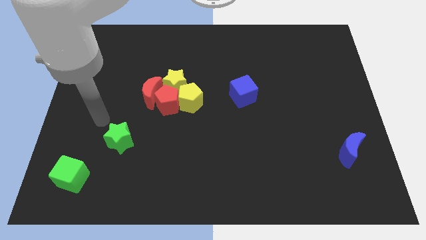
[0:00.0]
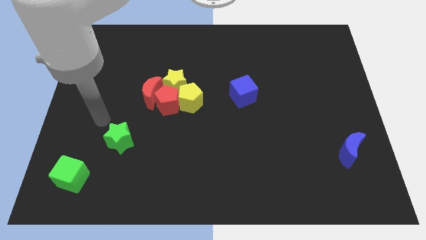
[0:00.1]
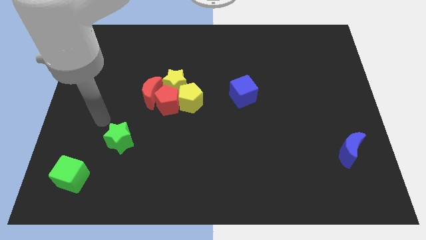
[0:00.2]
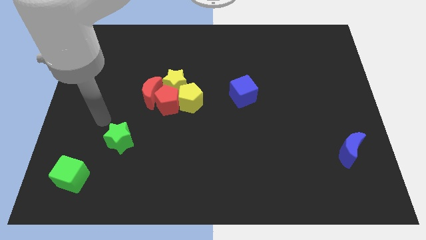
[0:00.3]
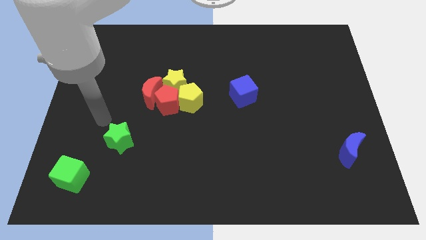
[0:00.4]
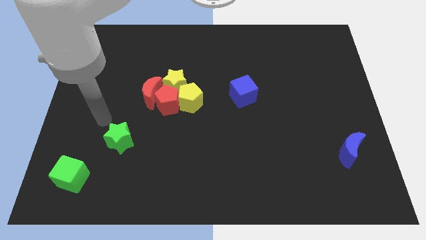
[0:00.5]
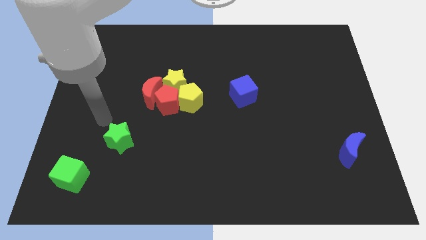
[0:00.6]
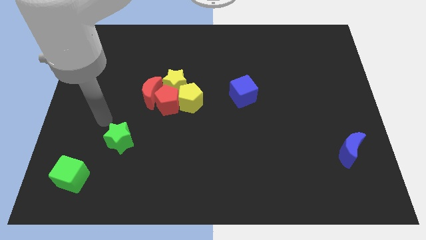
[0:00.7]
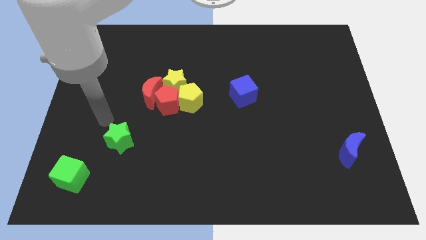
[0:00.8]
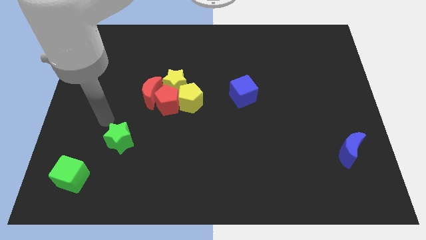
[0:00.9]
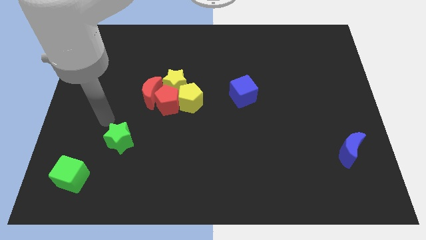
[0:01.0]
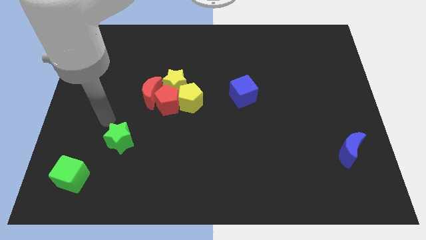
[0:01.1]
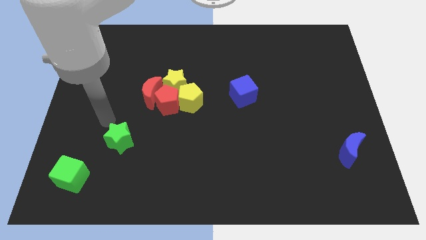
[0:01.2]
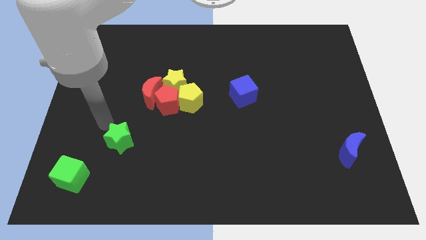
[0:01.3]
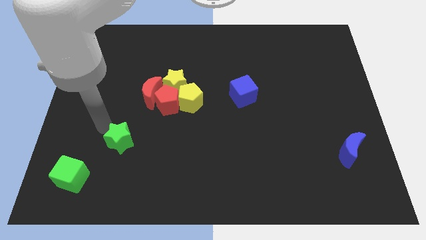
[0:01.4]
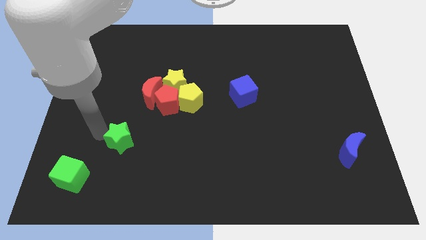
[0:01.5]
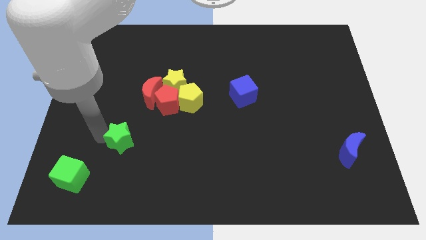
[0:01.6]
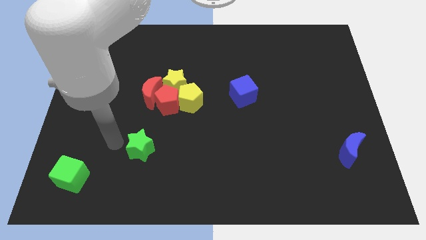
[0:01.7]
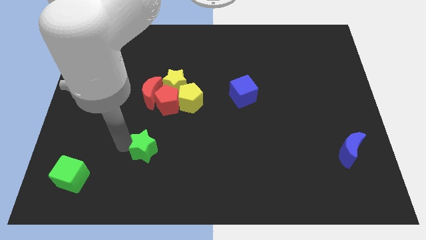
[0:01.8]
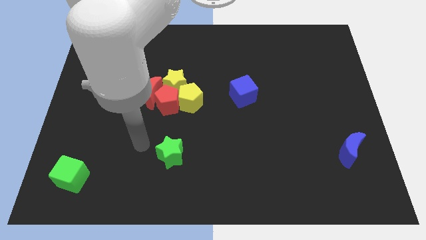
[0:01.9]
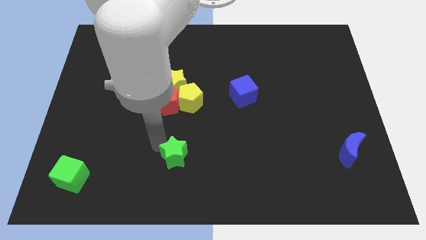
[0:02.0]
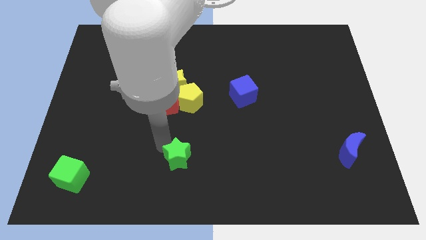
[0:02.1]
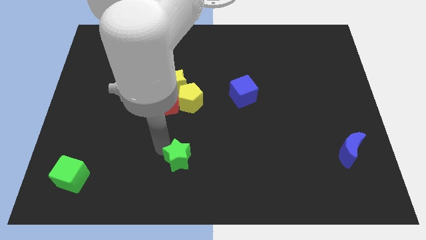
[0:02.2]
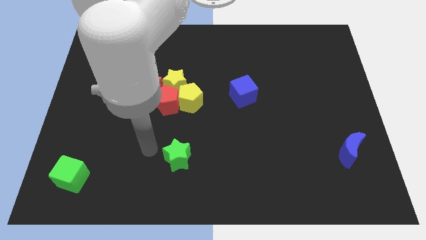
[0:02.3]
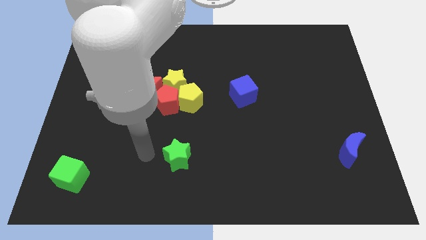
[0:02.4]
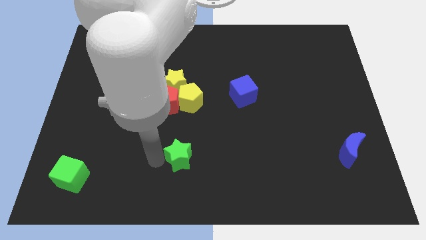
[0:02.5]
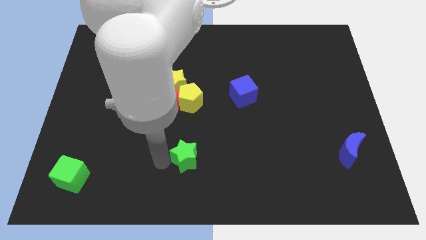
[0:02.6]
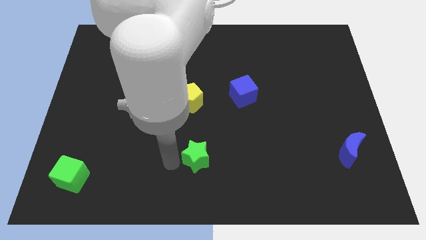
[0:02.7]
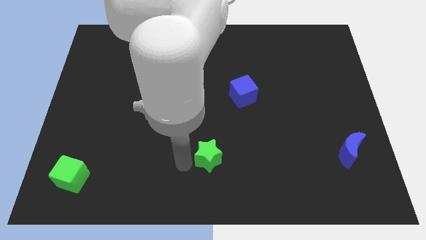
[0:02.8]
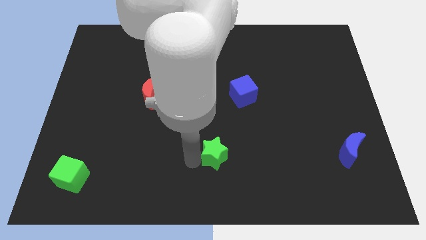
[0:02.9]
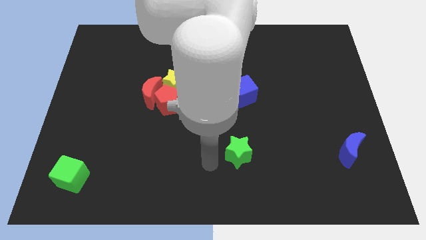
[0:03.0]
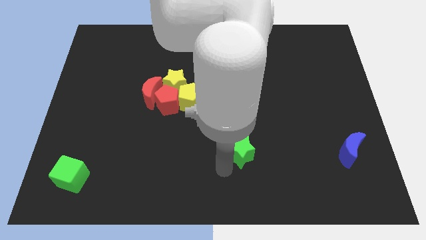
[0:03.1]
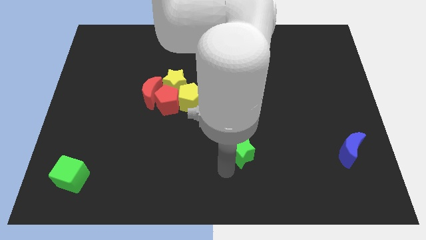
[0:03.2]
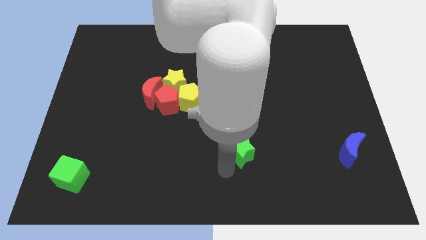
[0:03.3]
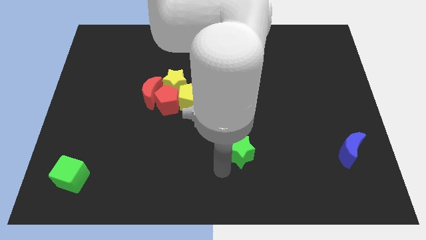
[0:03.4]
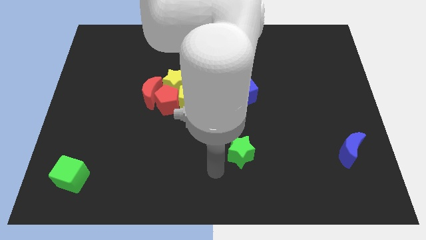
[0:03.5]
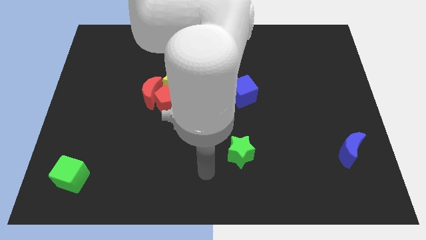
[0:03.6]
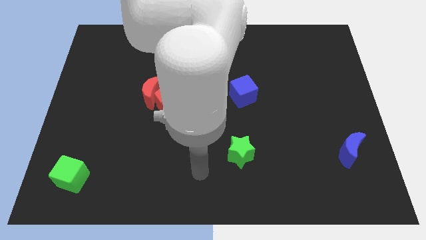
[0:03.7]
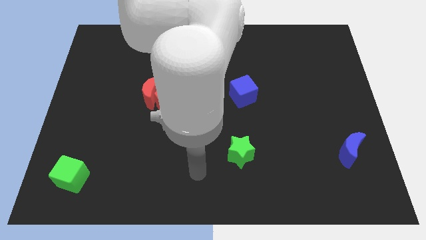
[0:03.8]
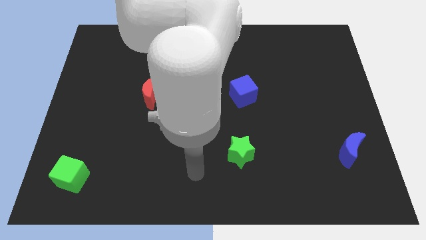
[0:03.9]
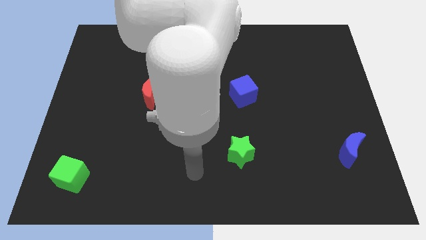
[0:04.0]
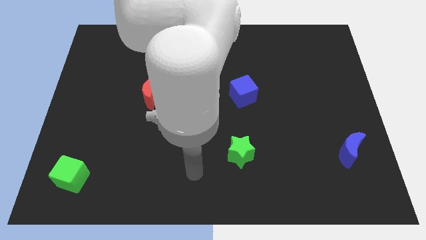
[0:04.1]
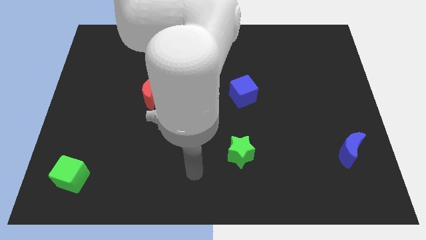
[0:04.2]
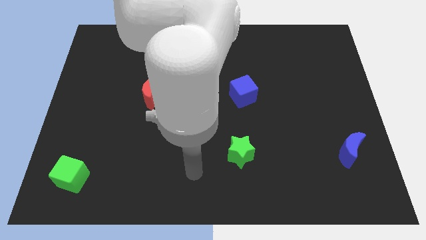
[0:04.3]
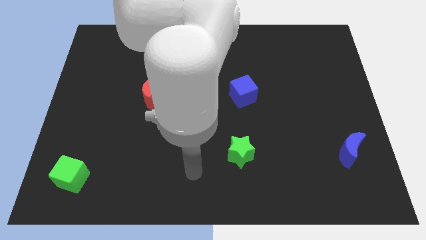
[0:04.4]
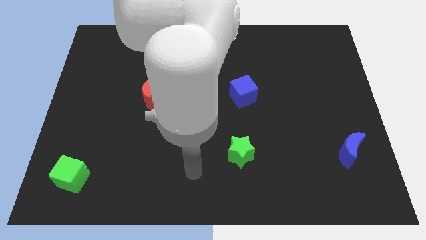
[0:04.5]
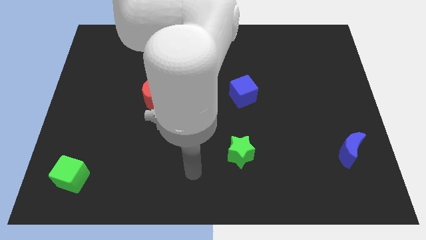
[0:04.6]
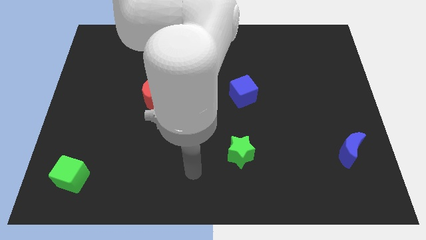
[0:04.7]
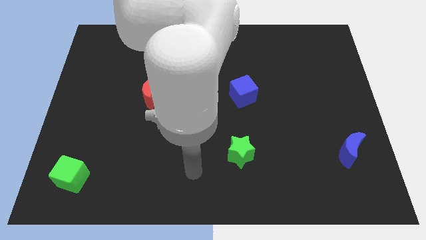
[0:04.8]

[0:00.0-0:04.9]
push the green star towards the bottom center of the board

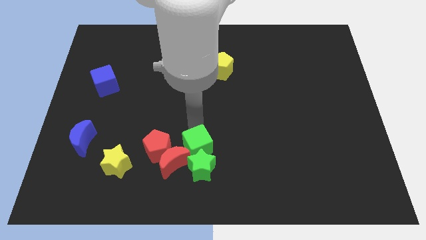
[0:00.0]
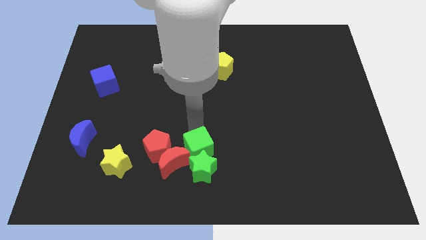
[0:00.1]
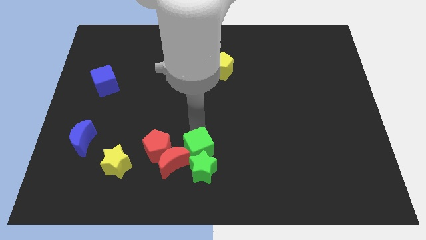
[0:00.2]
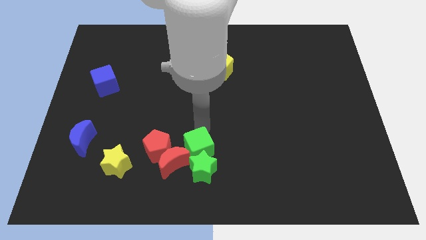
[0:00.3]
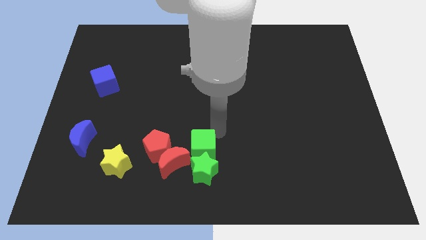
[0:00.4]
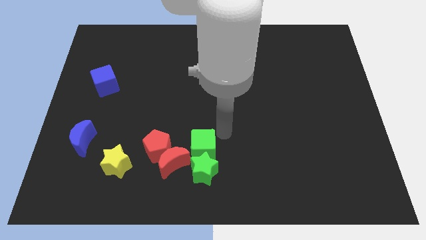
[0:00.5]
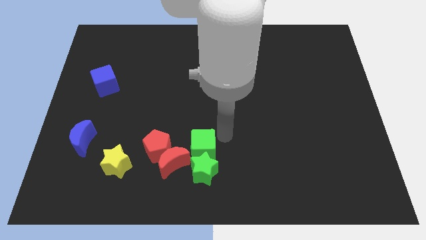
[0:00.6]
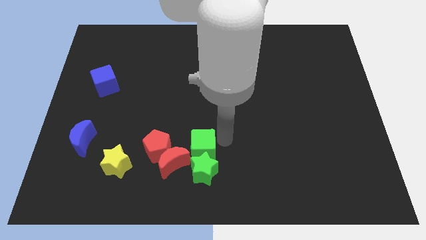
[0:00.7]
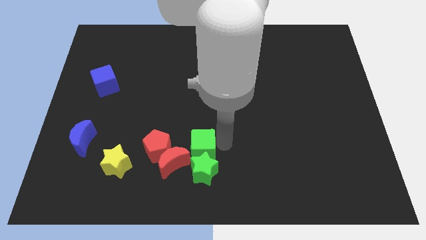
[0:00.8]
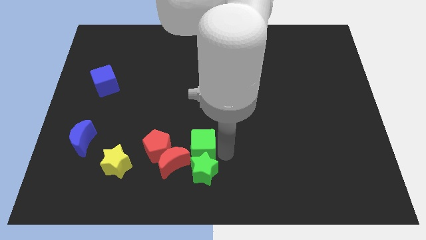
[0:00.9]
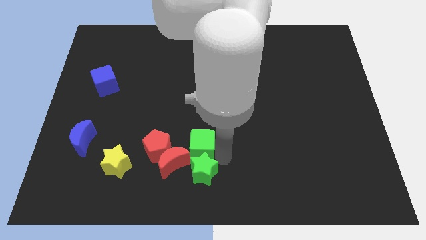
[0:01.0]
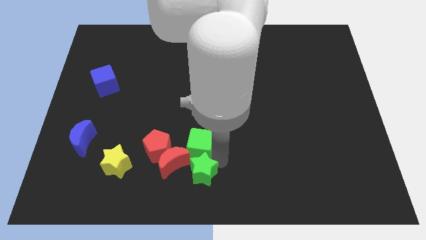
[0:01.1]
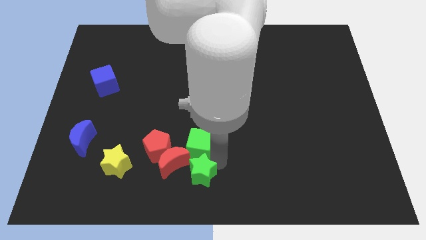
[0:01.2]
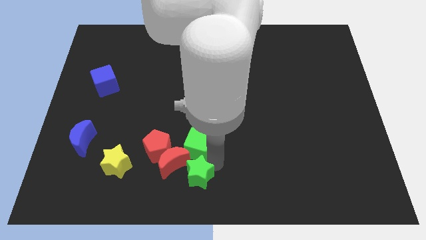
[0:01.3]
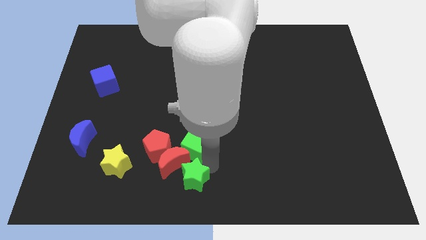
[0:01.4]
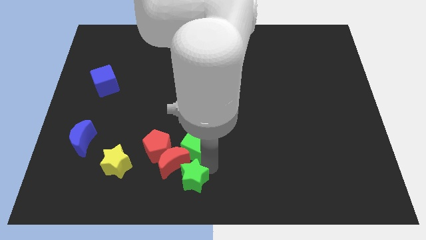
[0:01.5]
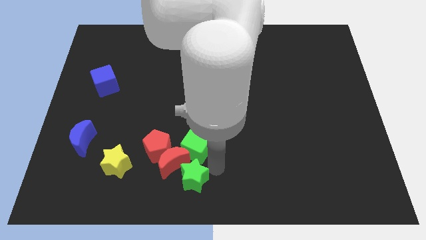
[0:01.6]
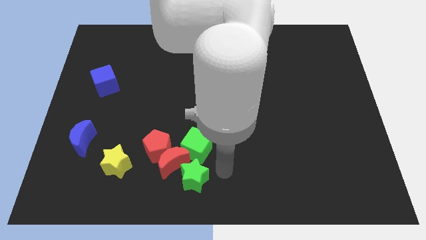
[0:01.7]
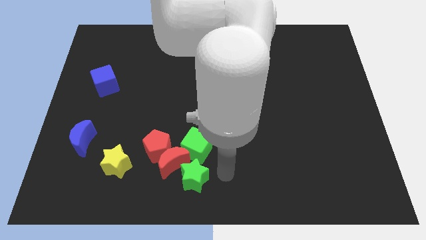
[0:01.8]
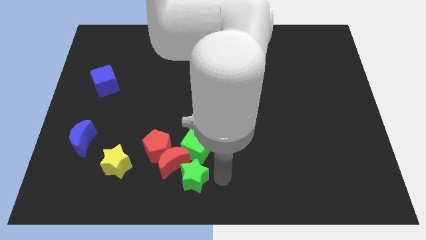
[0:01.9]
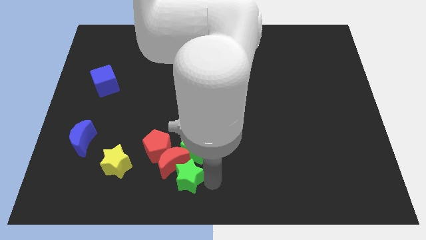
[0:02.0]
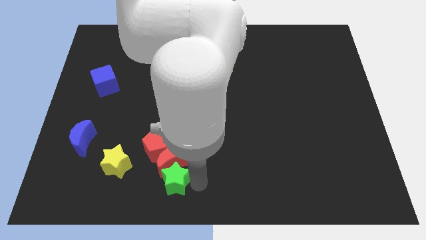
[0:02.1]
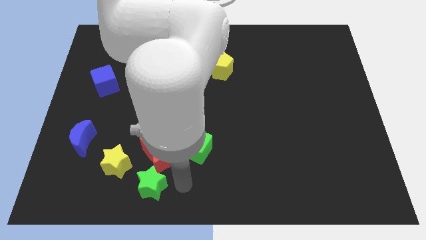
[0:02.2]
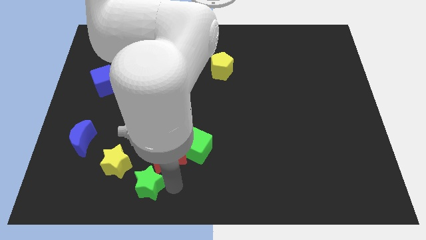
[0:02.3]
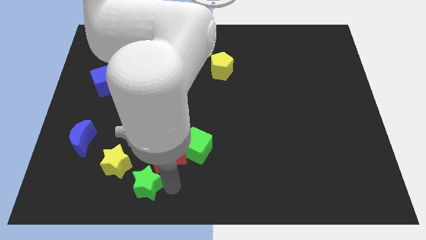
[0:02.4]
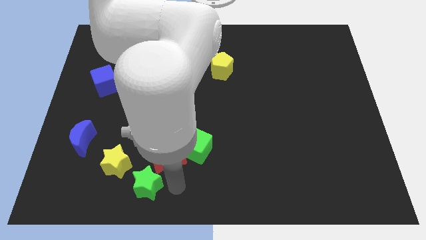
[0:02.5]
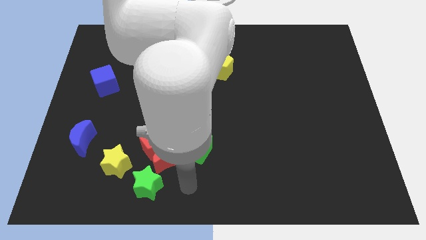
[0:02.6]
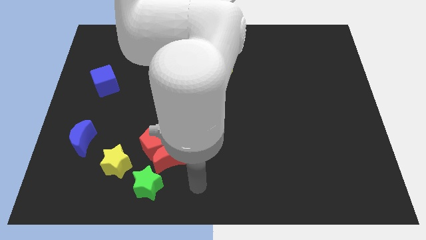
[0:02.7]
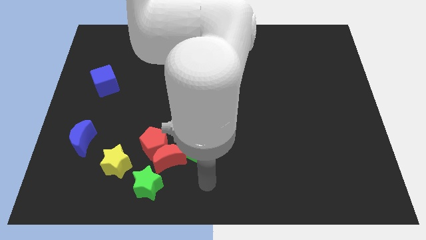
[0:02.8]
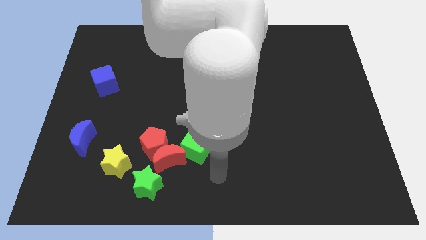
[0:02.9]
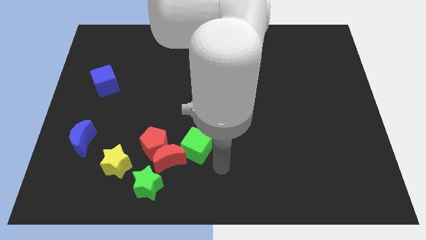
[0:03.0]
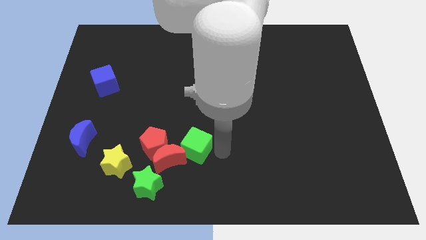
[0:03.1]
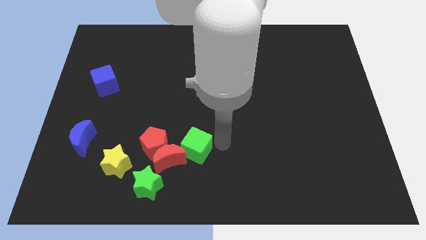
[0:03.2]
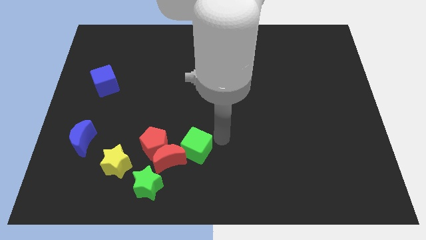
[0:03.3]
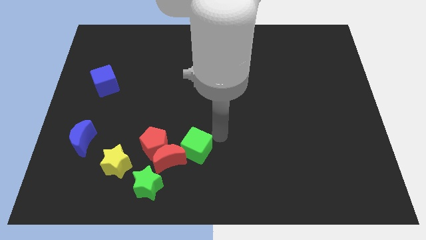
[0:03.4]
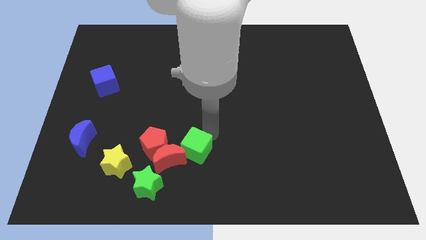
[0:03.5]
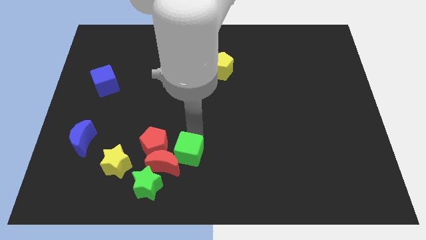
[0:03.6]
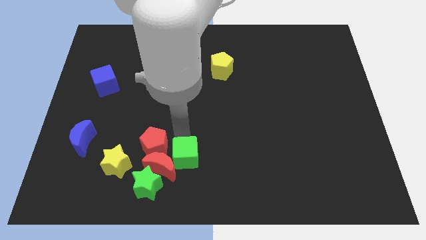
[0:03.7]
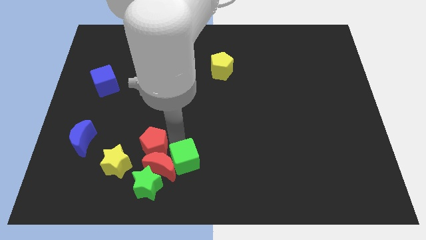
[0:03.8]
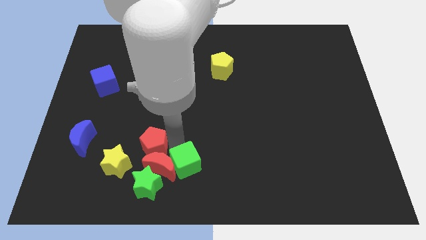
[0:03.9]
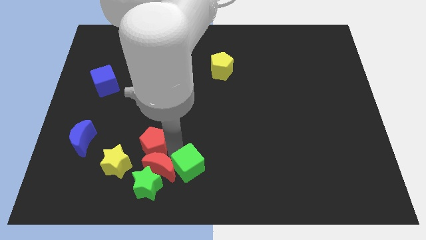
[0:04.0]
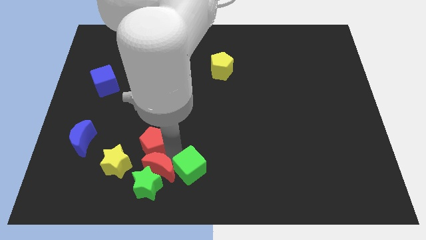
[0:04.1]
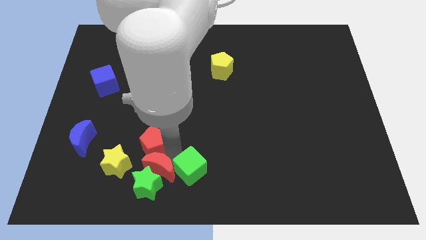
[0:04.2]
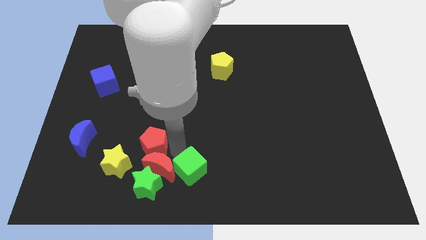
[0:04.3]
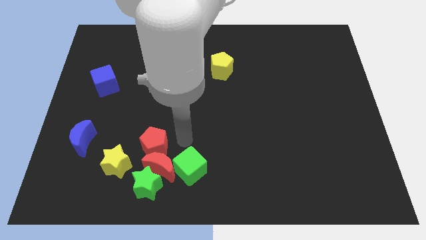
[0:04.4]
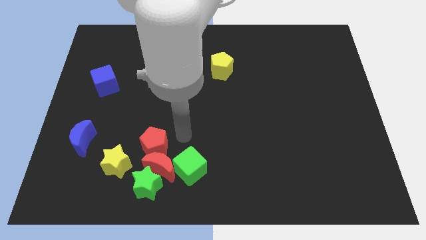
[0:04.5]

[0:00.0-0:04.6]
adjust all the red and green blocks to the right side of the yellow star
